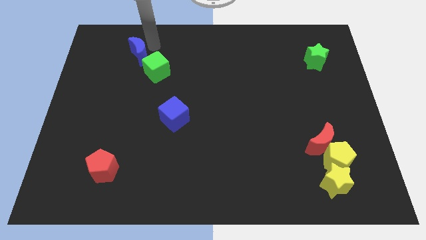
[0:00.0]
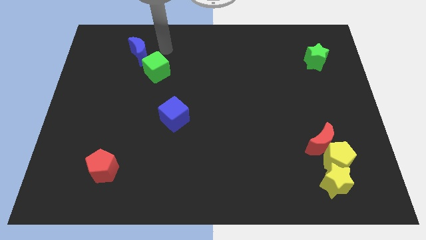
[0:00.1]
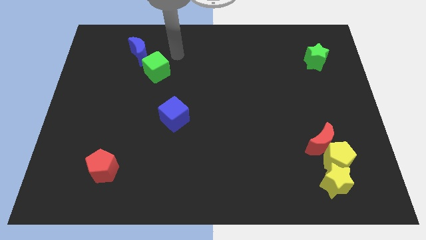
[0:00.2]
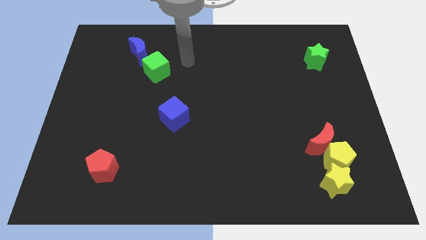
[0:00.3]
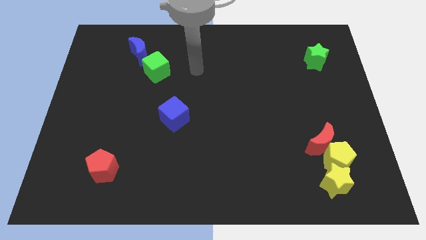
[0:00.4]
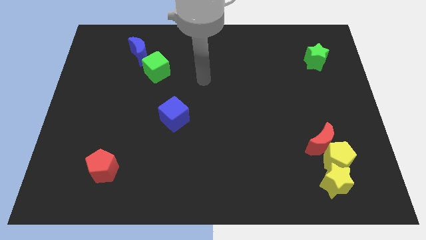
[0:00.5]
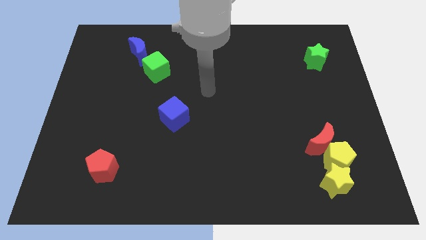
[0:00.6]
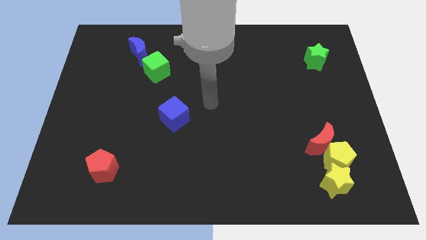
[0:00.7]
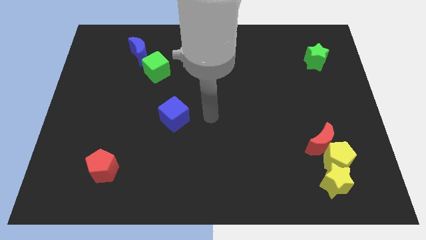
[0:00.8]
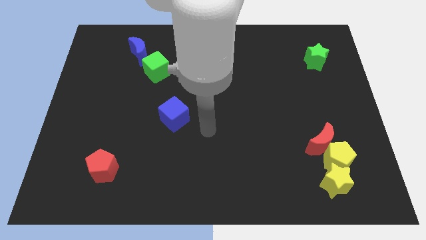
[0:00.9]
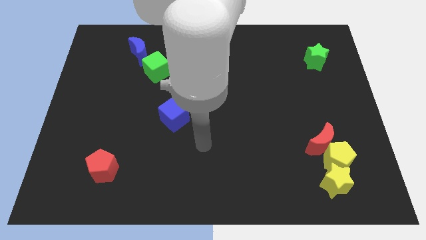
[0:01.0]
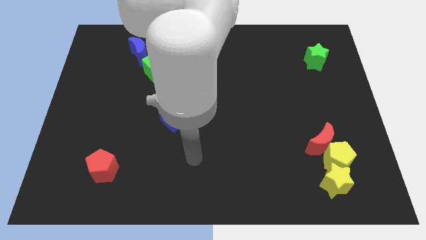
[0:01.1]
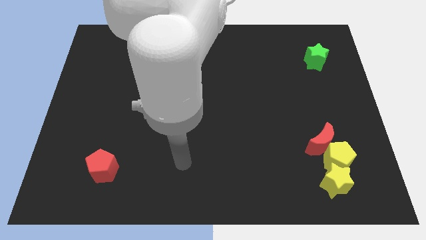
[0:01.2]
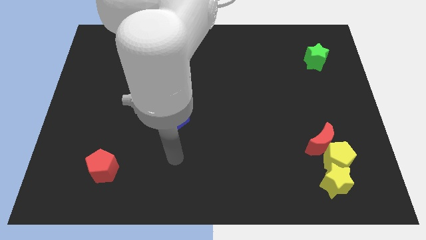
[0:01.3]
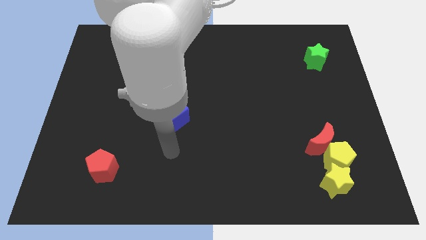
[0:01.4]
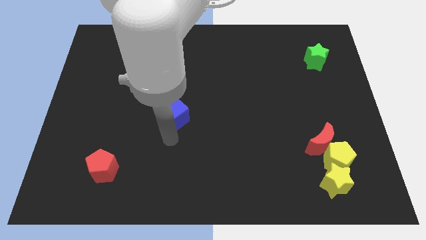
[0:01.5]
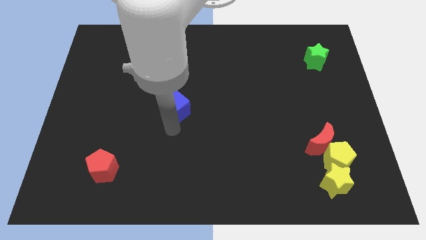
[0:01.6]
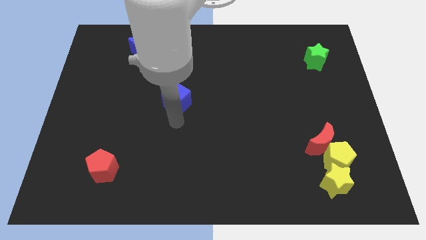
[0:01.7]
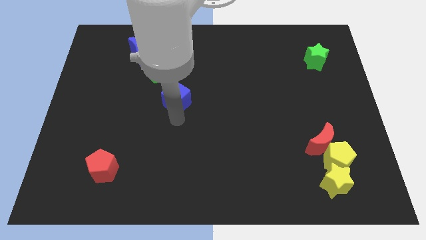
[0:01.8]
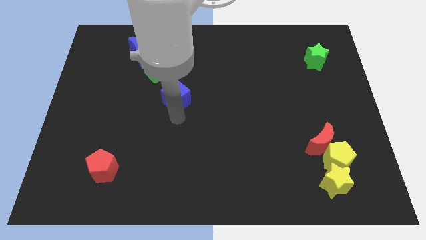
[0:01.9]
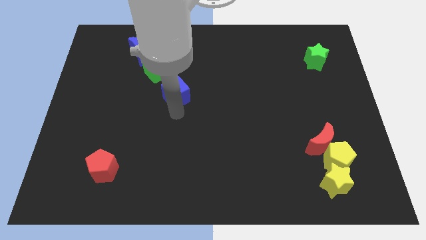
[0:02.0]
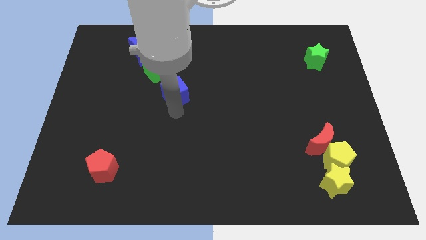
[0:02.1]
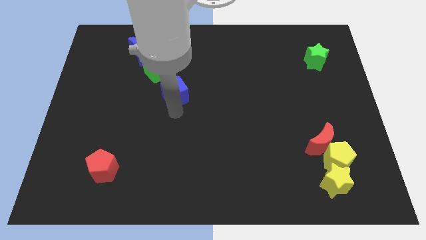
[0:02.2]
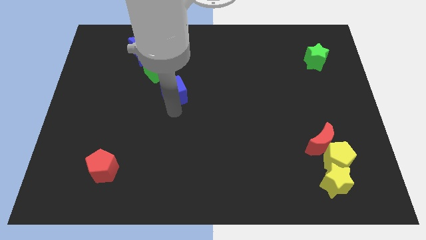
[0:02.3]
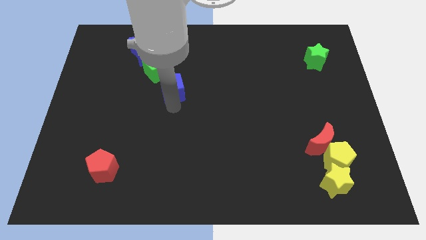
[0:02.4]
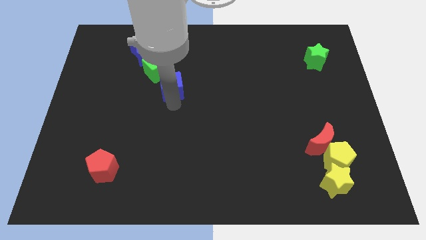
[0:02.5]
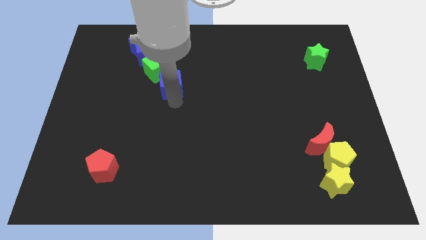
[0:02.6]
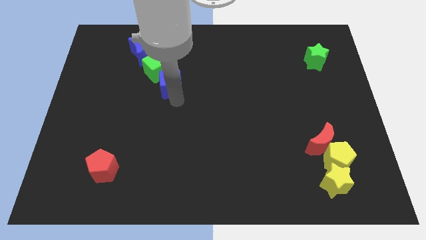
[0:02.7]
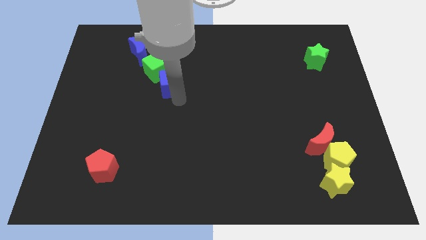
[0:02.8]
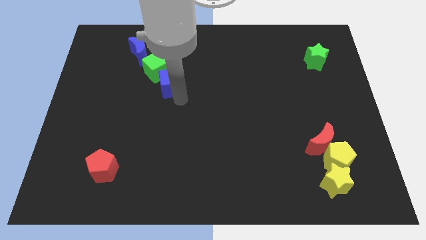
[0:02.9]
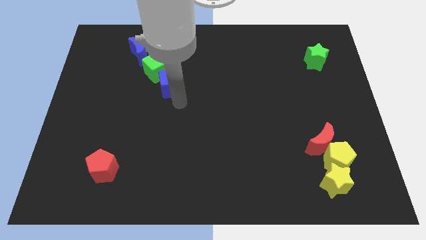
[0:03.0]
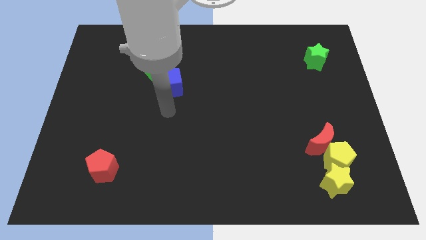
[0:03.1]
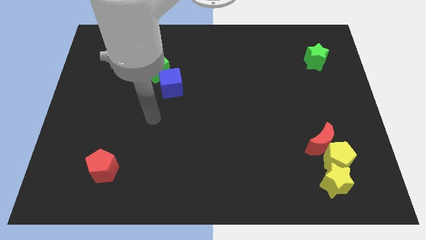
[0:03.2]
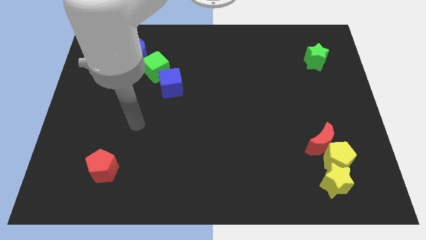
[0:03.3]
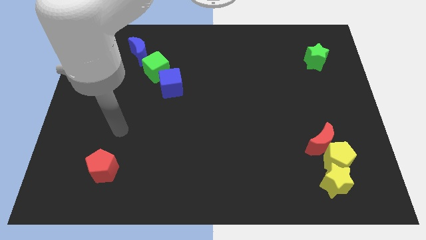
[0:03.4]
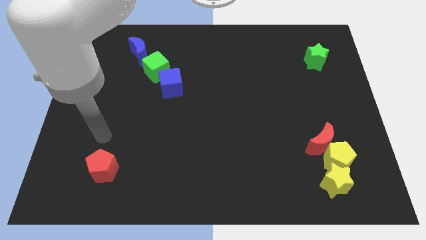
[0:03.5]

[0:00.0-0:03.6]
move the blue cube towards the green cube in a row

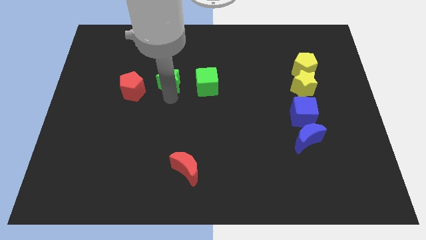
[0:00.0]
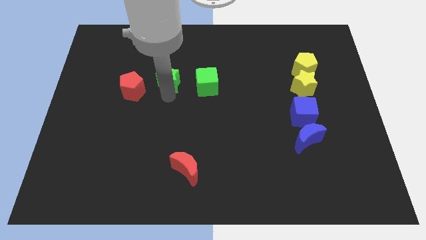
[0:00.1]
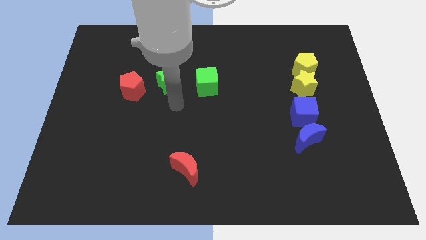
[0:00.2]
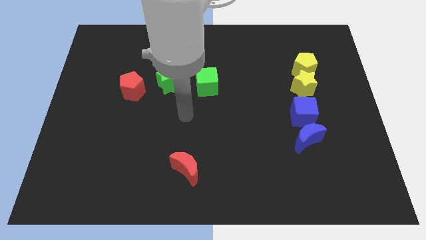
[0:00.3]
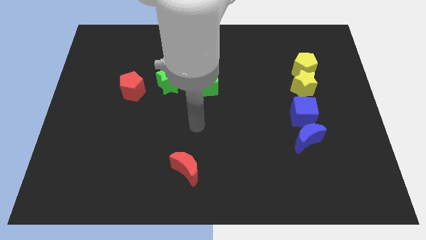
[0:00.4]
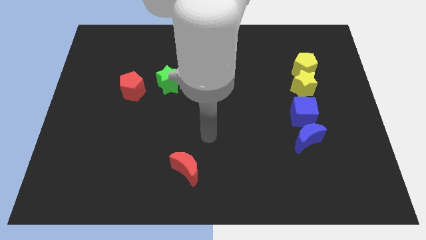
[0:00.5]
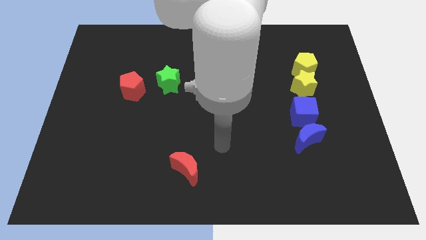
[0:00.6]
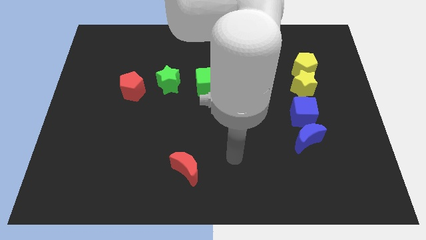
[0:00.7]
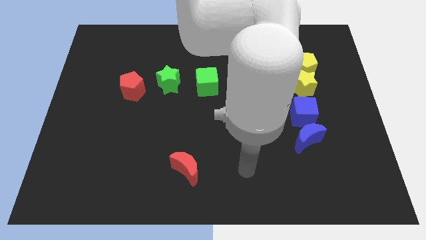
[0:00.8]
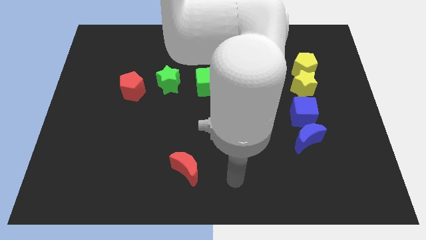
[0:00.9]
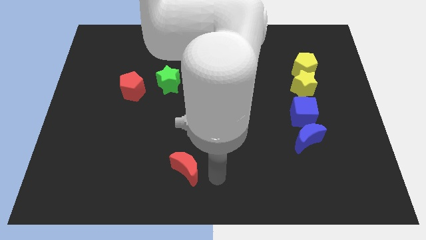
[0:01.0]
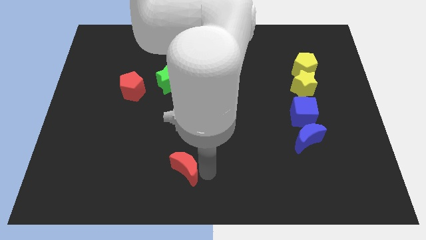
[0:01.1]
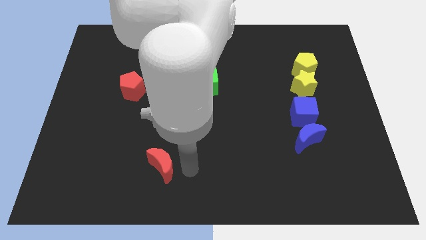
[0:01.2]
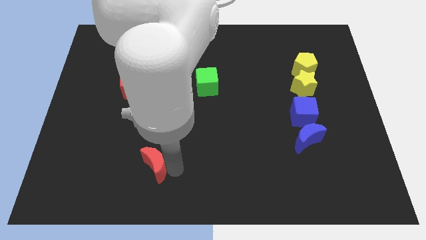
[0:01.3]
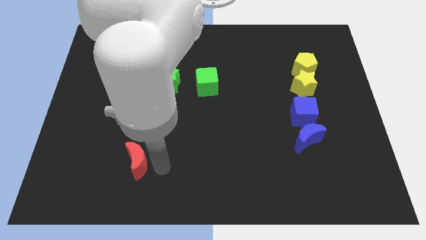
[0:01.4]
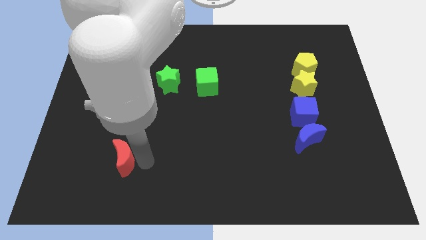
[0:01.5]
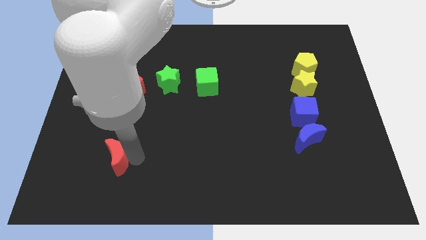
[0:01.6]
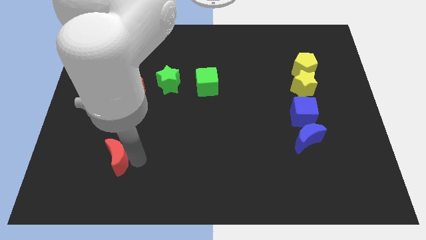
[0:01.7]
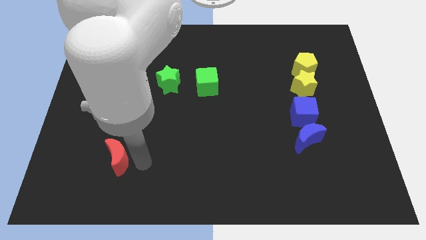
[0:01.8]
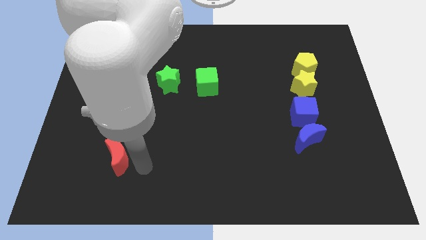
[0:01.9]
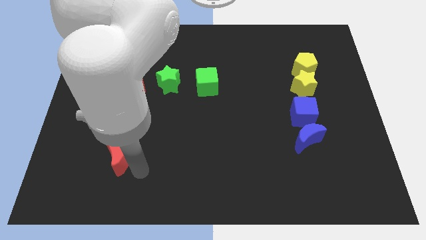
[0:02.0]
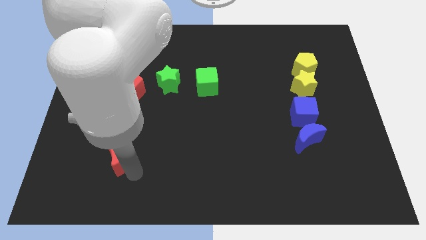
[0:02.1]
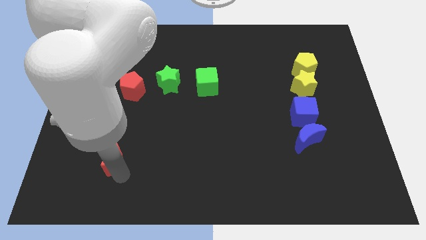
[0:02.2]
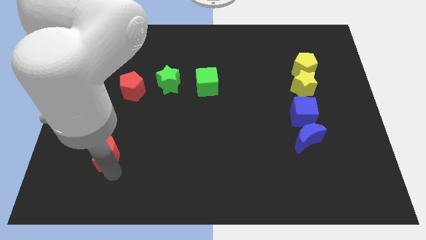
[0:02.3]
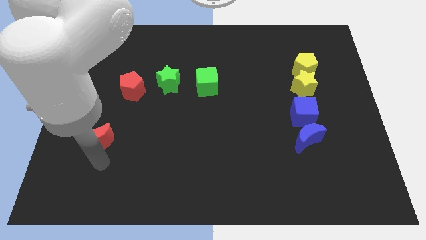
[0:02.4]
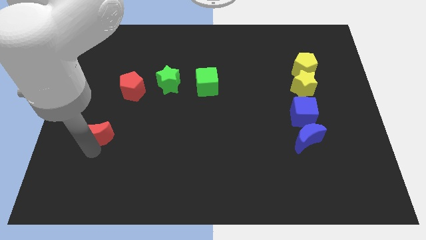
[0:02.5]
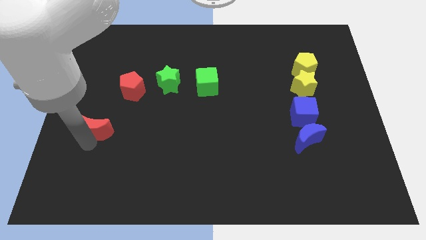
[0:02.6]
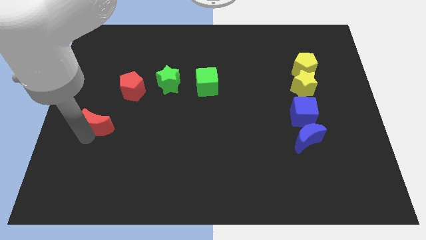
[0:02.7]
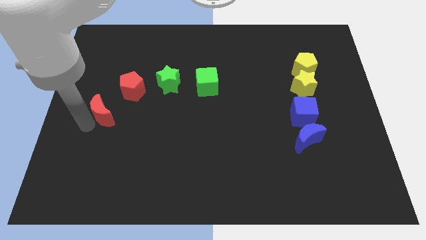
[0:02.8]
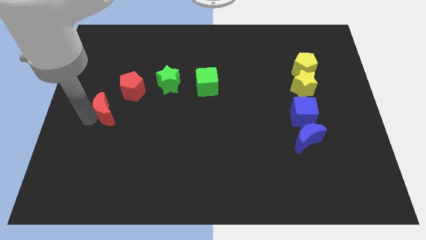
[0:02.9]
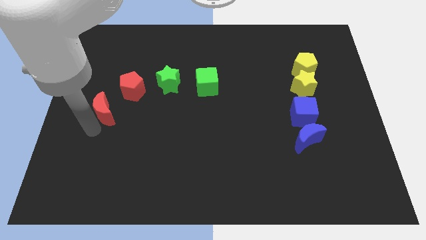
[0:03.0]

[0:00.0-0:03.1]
move the red crescent towards the red pentagon

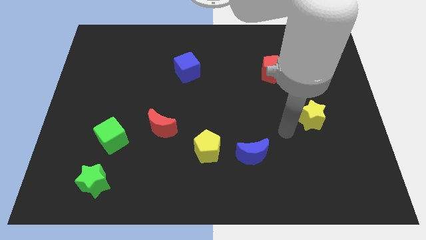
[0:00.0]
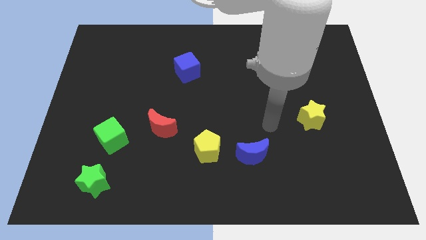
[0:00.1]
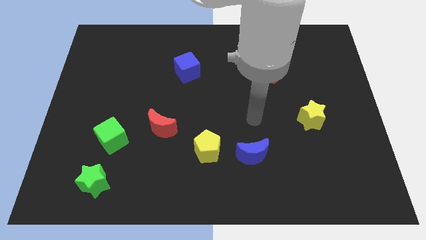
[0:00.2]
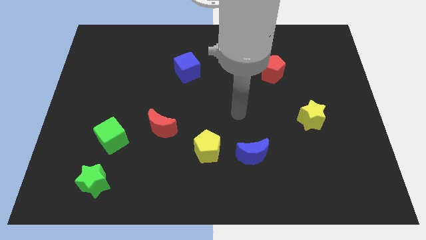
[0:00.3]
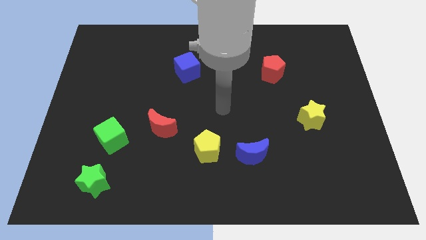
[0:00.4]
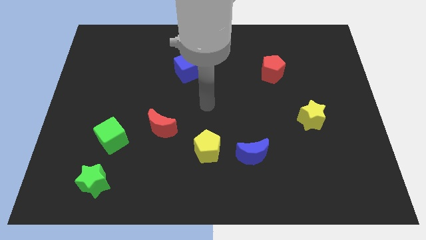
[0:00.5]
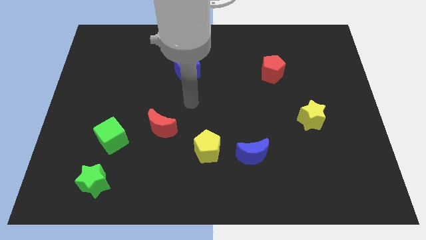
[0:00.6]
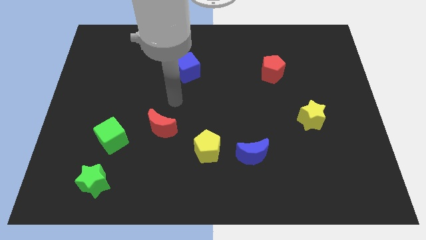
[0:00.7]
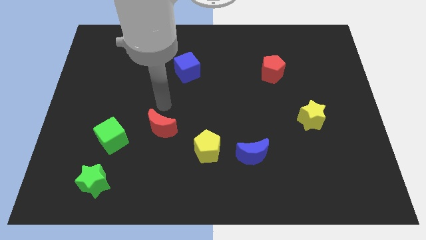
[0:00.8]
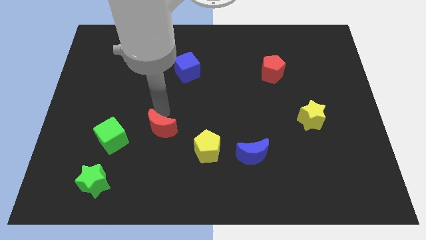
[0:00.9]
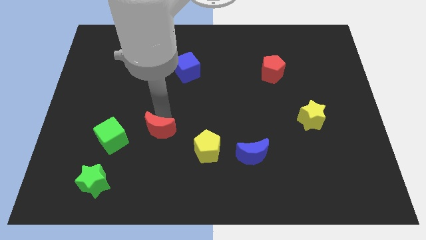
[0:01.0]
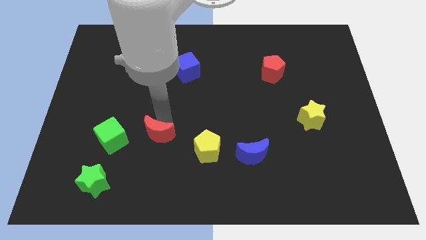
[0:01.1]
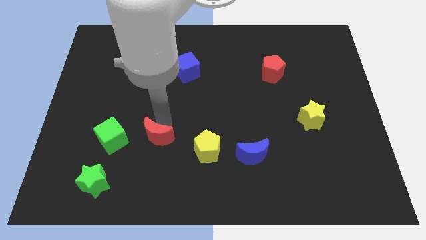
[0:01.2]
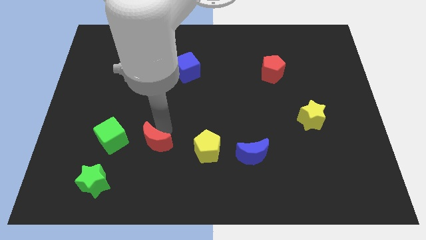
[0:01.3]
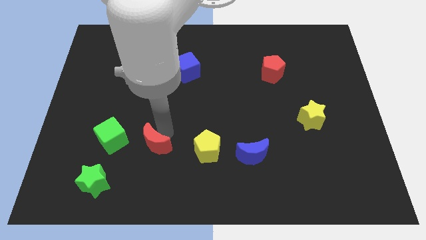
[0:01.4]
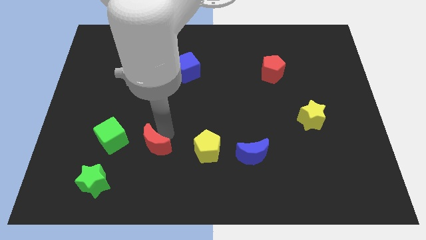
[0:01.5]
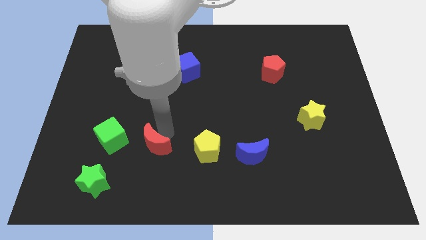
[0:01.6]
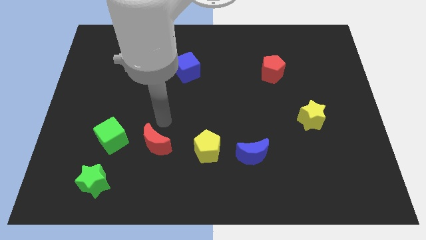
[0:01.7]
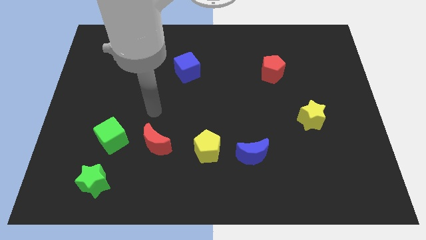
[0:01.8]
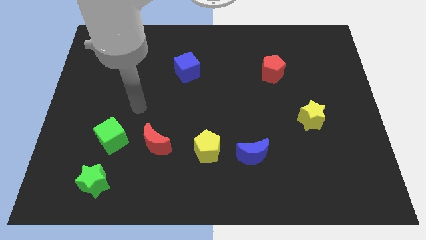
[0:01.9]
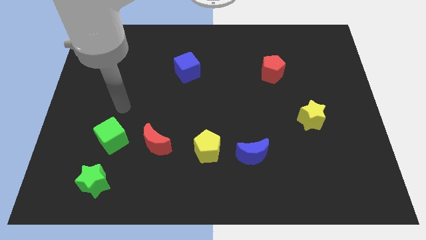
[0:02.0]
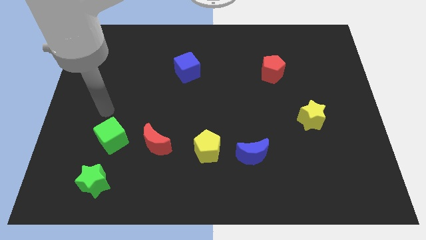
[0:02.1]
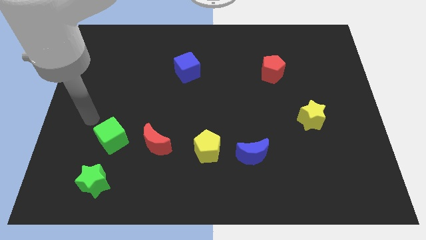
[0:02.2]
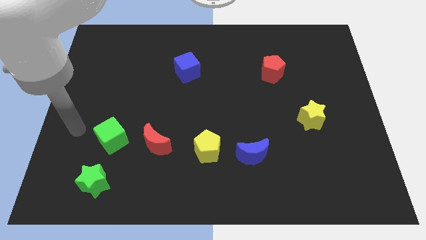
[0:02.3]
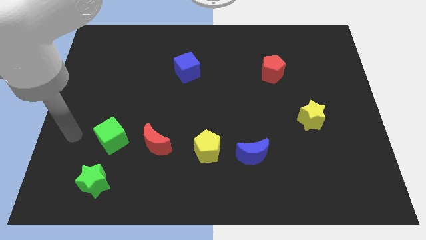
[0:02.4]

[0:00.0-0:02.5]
place red pentagon to the right of green cube
